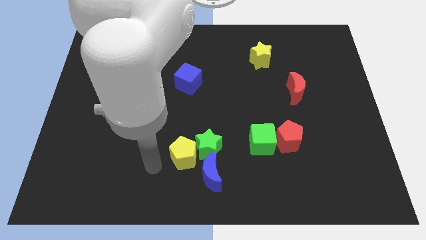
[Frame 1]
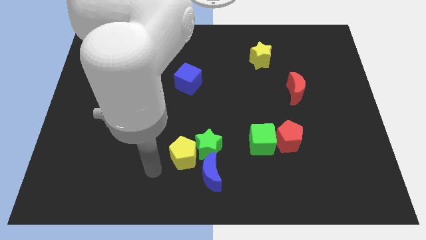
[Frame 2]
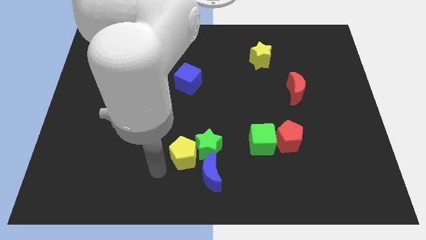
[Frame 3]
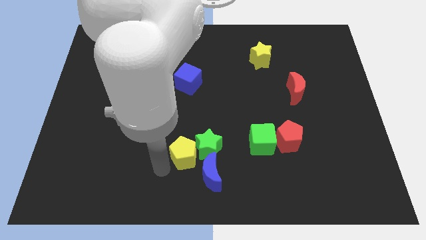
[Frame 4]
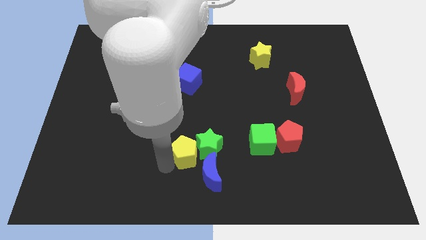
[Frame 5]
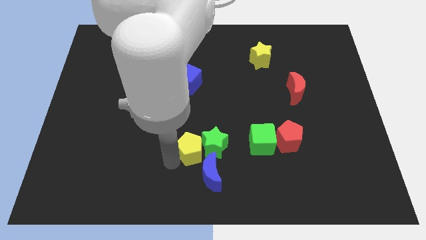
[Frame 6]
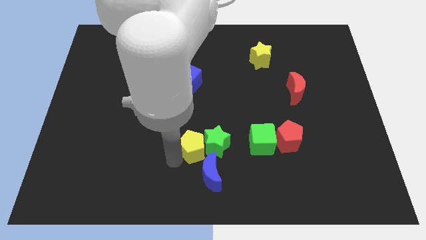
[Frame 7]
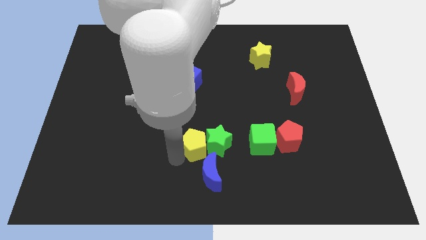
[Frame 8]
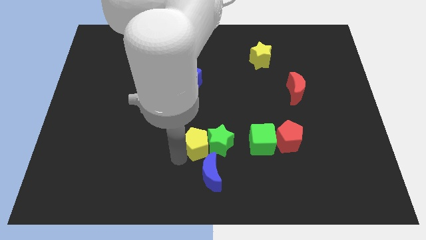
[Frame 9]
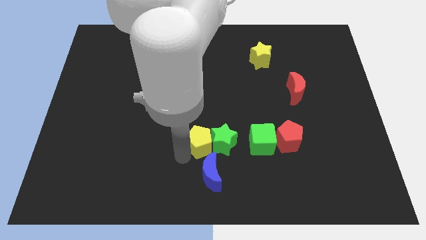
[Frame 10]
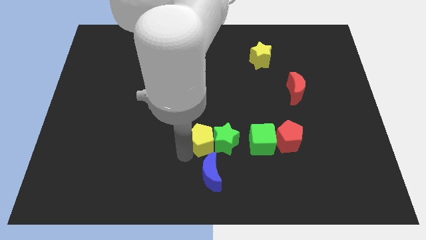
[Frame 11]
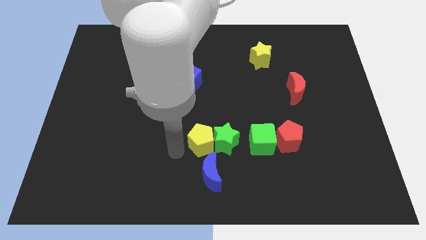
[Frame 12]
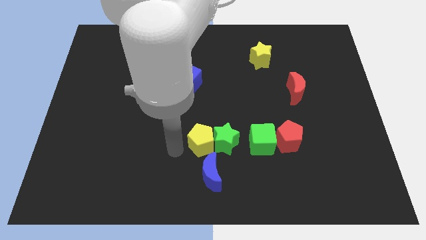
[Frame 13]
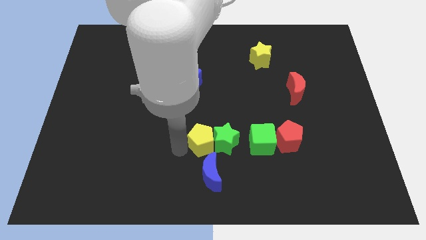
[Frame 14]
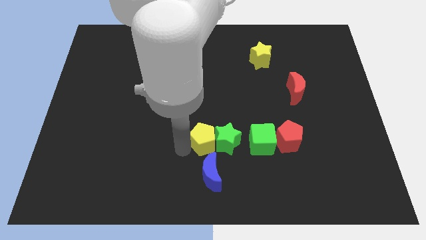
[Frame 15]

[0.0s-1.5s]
push the green star along with the yellow pentagon towards right

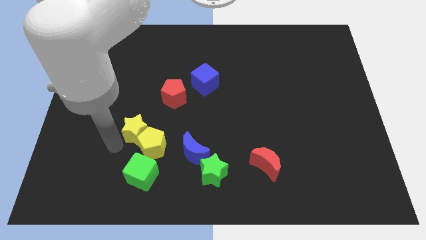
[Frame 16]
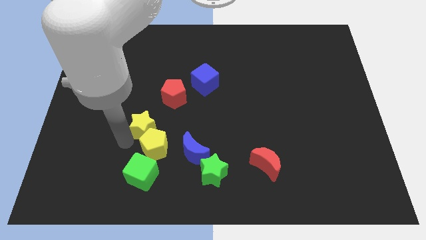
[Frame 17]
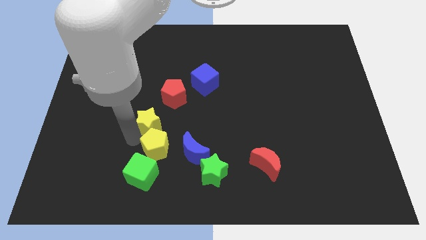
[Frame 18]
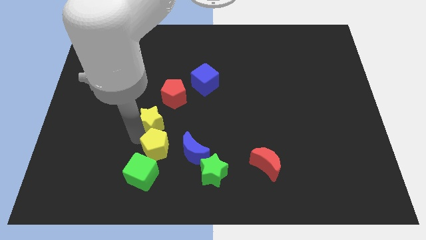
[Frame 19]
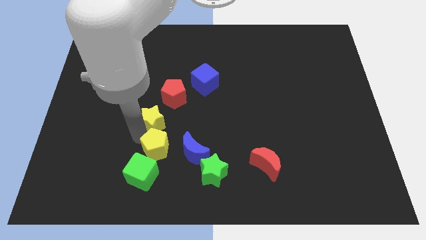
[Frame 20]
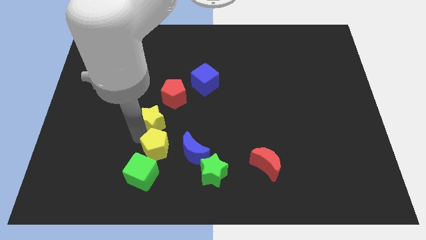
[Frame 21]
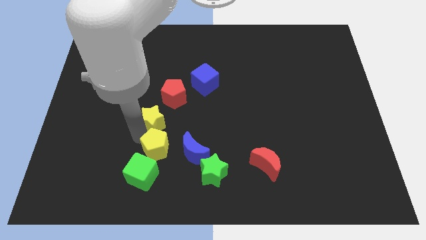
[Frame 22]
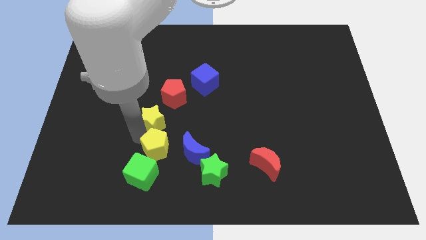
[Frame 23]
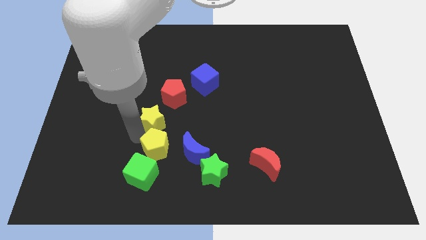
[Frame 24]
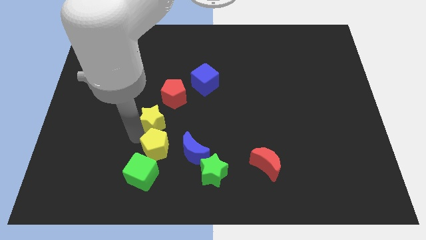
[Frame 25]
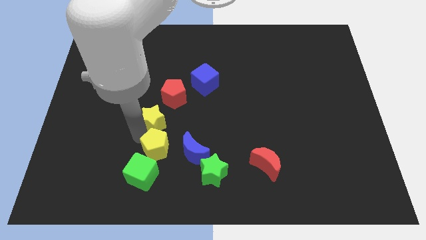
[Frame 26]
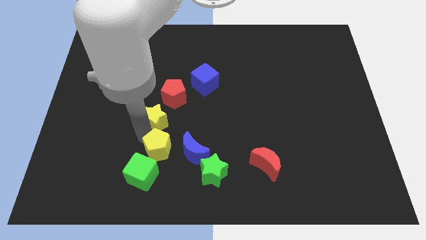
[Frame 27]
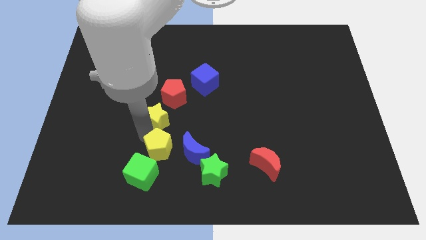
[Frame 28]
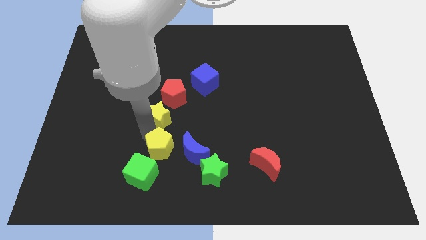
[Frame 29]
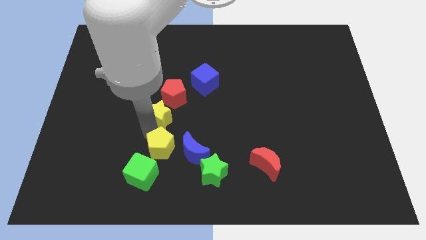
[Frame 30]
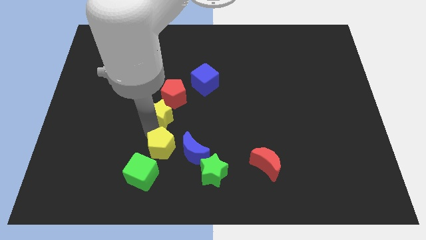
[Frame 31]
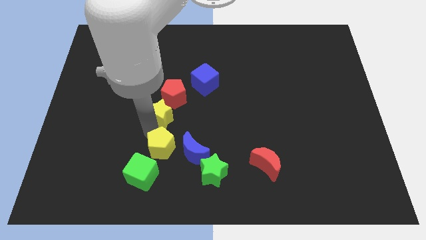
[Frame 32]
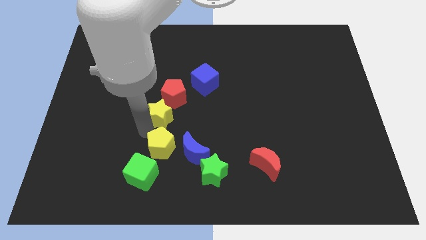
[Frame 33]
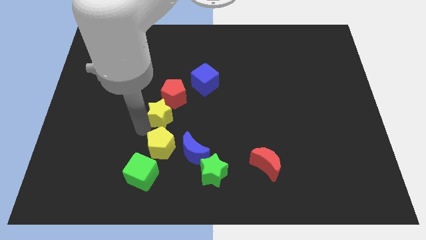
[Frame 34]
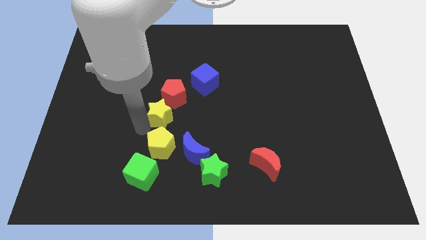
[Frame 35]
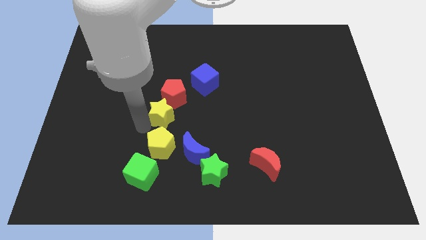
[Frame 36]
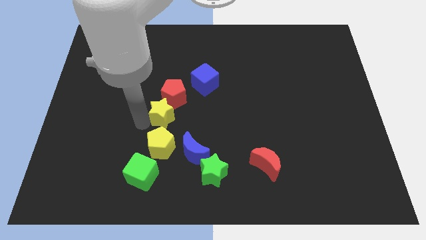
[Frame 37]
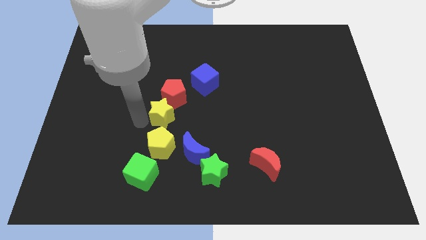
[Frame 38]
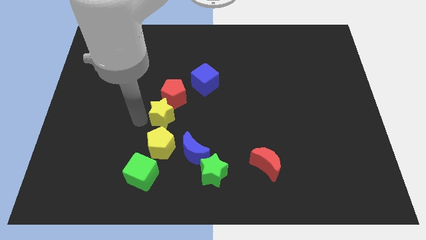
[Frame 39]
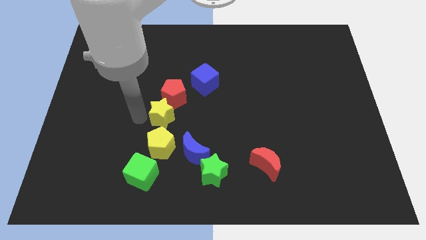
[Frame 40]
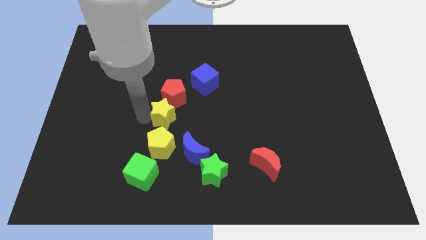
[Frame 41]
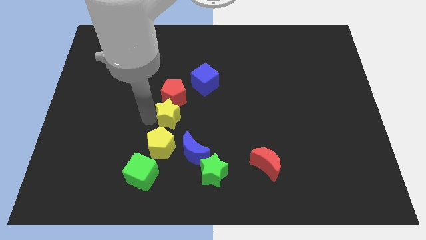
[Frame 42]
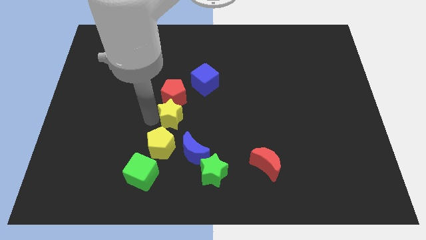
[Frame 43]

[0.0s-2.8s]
place yellow star below red pentagon

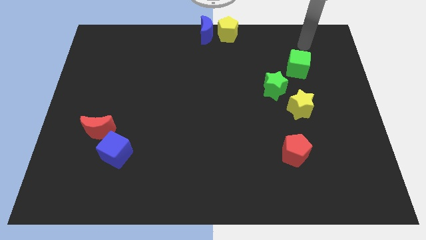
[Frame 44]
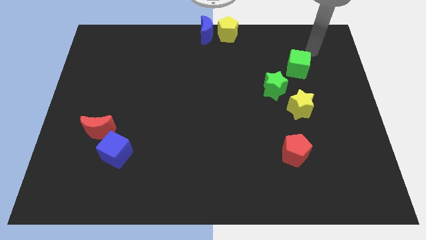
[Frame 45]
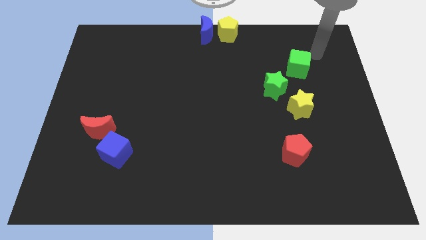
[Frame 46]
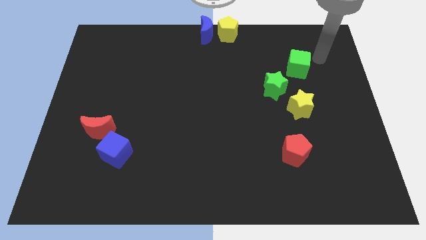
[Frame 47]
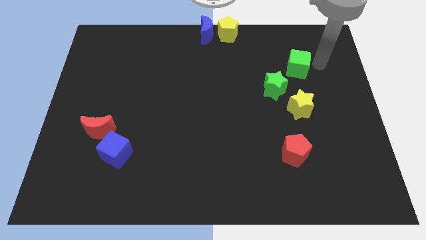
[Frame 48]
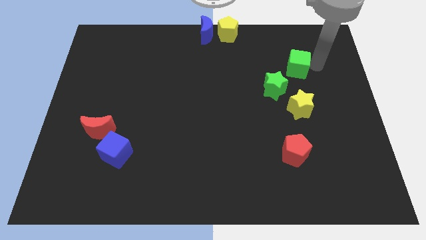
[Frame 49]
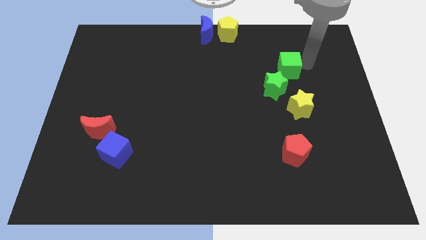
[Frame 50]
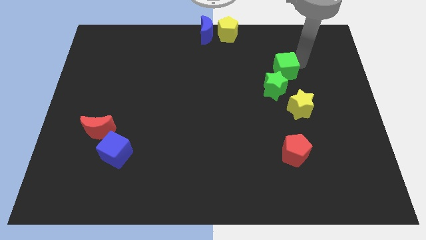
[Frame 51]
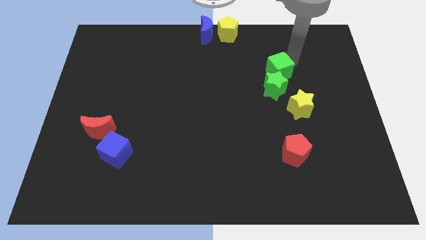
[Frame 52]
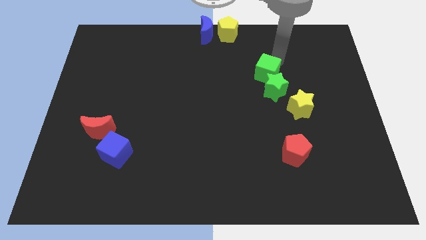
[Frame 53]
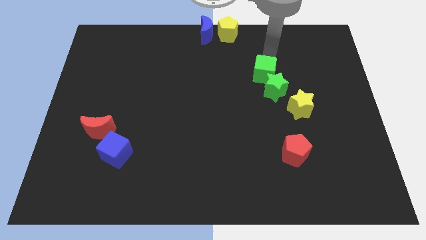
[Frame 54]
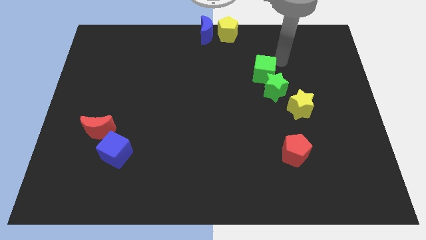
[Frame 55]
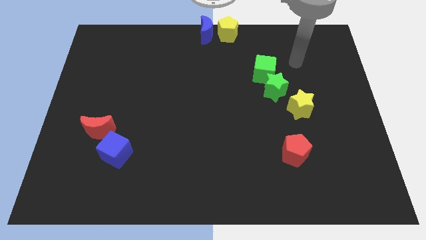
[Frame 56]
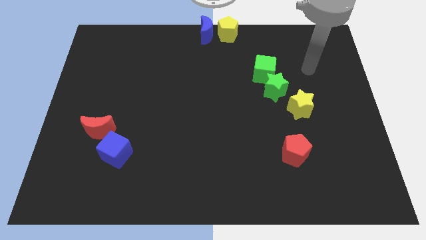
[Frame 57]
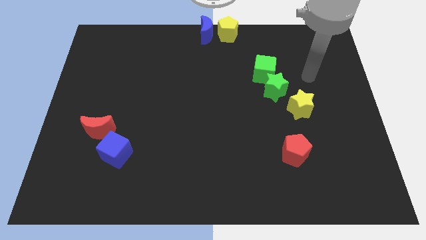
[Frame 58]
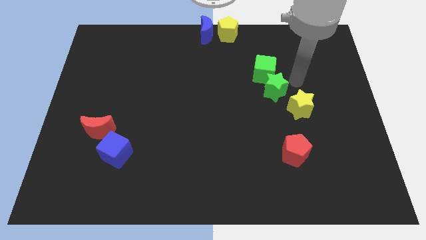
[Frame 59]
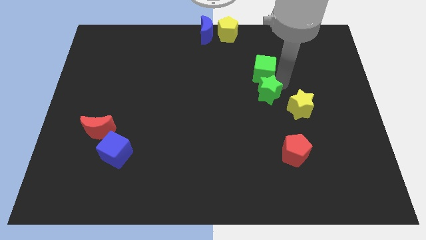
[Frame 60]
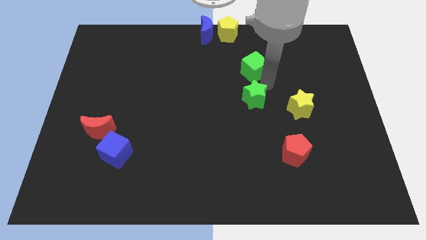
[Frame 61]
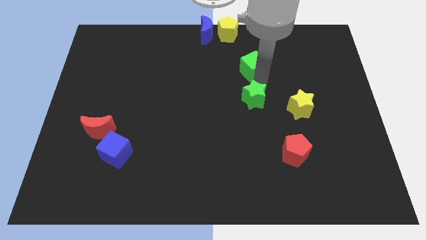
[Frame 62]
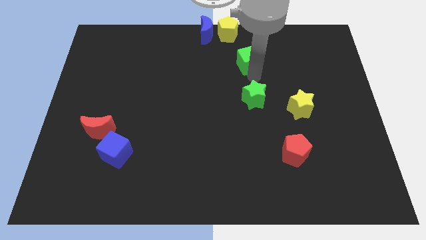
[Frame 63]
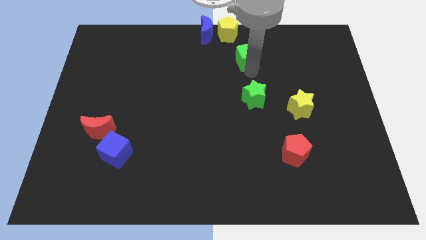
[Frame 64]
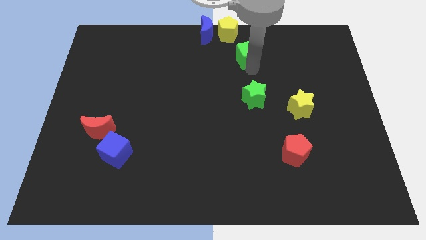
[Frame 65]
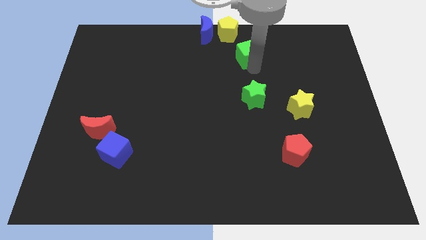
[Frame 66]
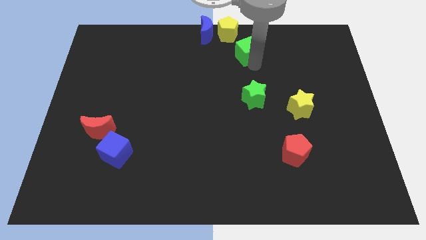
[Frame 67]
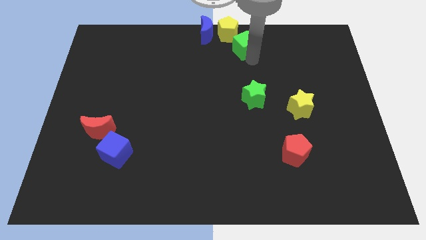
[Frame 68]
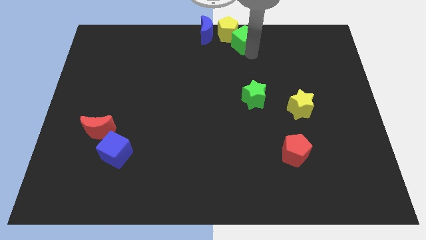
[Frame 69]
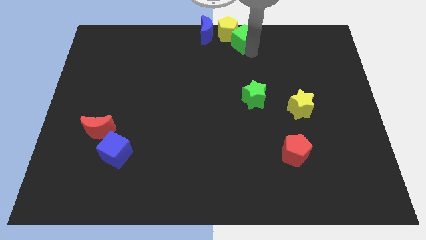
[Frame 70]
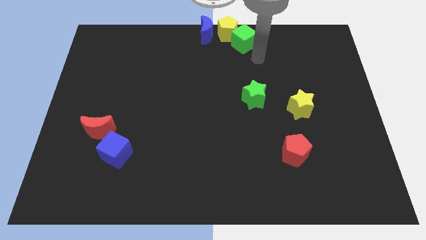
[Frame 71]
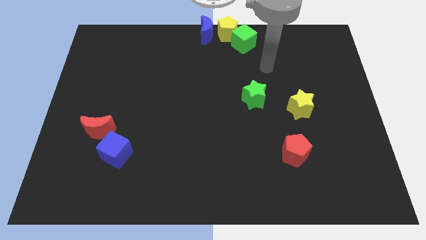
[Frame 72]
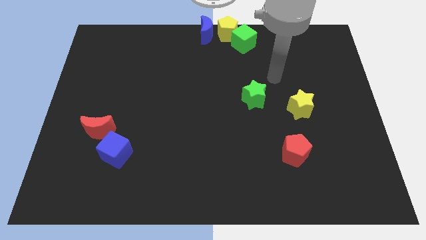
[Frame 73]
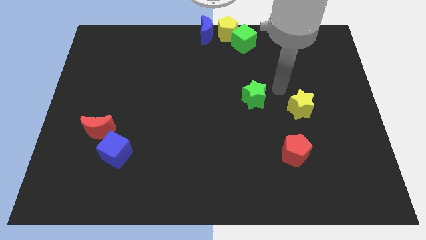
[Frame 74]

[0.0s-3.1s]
push green cube at the bottom right of yellow pentagon

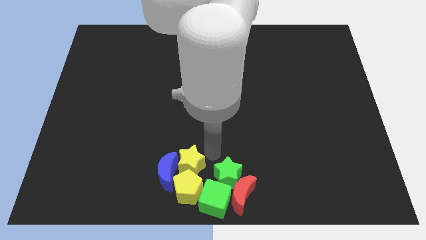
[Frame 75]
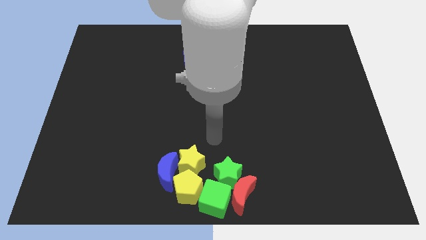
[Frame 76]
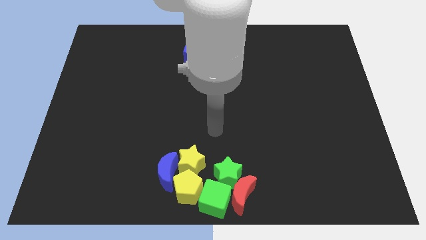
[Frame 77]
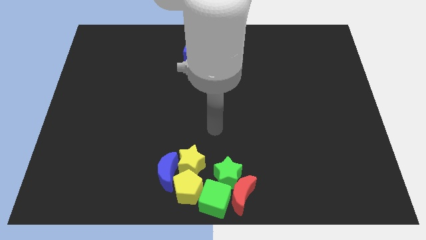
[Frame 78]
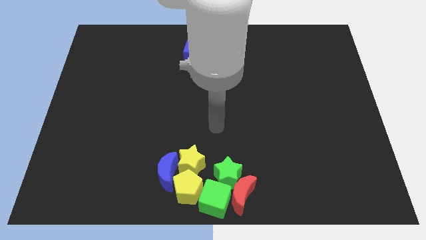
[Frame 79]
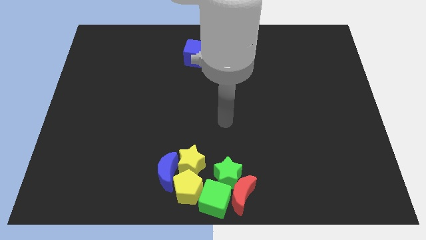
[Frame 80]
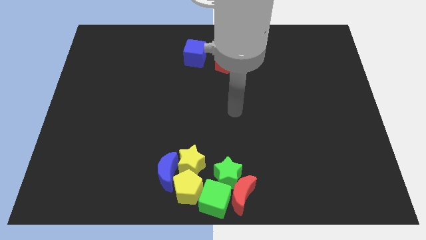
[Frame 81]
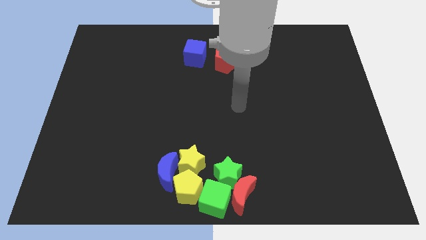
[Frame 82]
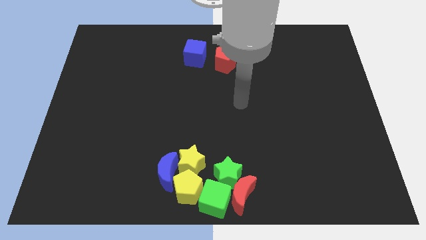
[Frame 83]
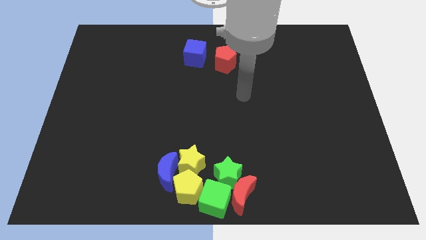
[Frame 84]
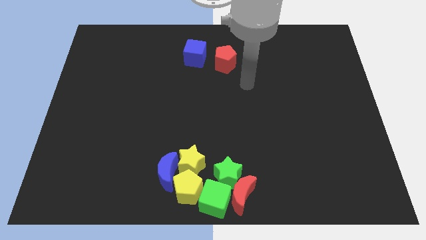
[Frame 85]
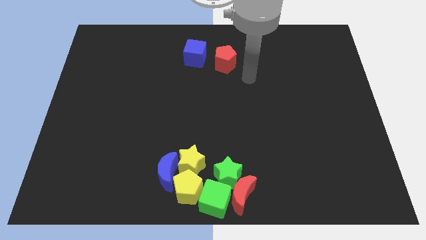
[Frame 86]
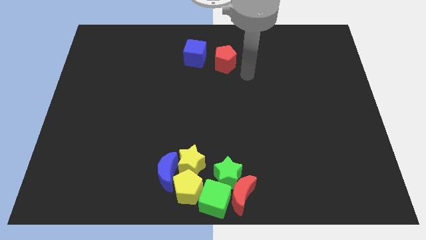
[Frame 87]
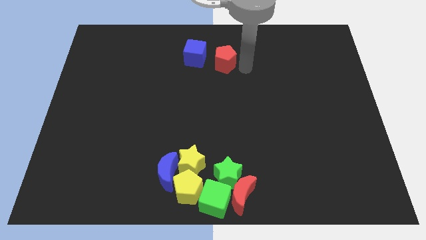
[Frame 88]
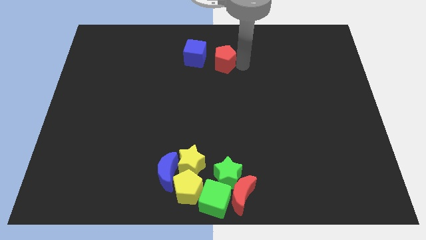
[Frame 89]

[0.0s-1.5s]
put your arm at the top right side of the red pentagon
